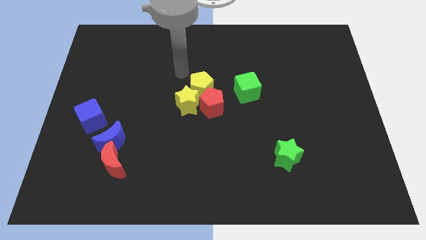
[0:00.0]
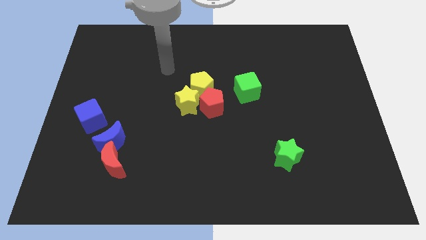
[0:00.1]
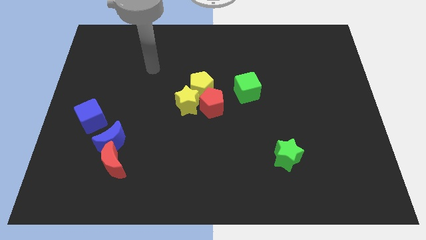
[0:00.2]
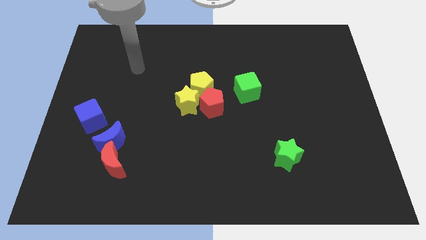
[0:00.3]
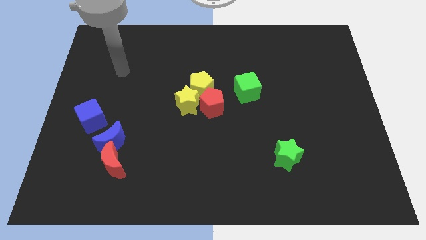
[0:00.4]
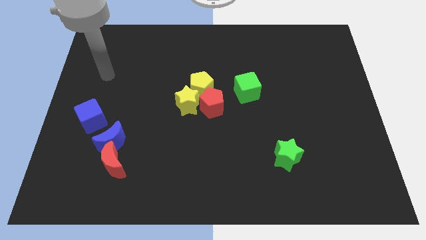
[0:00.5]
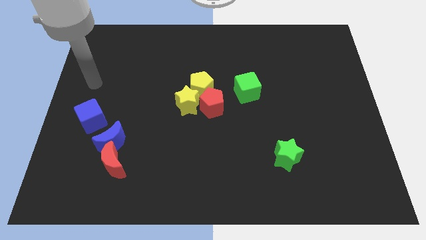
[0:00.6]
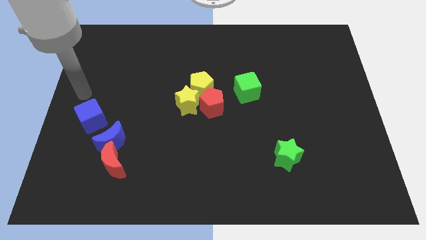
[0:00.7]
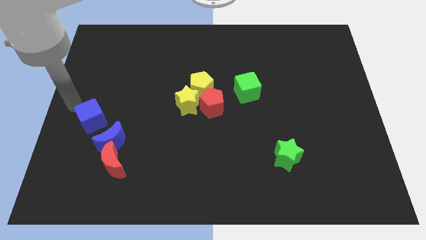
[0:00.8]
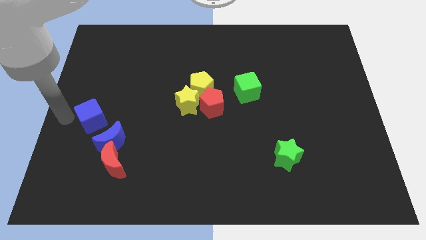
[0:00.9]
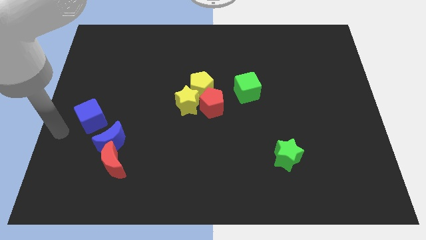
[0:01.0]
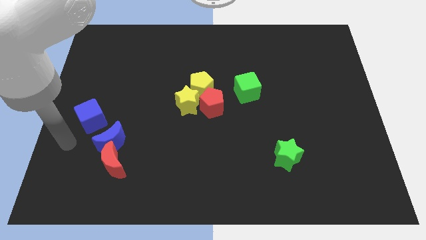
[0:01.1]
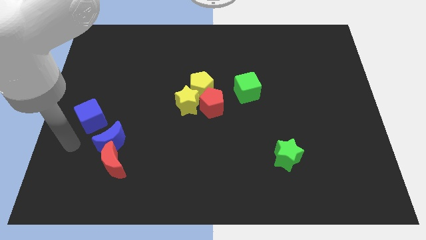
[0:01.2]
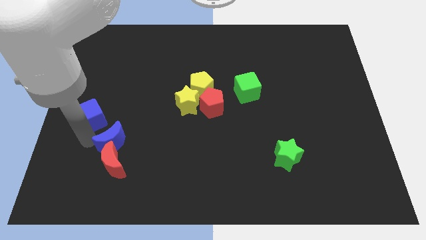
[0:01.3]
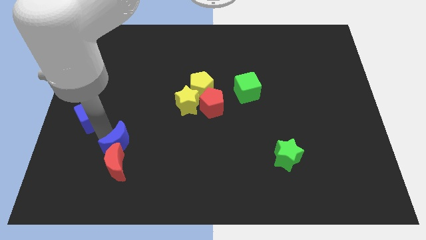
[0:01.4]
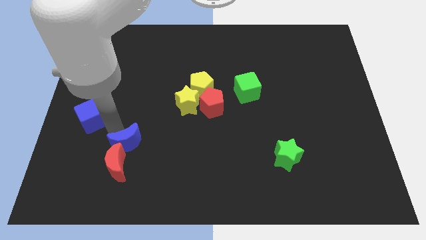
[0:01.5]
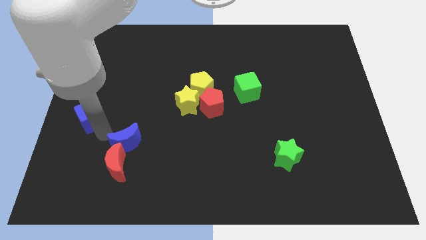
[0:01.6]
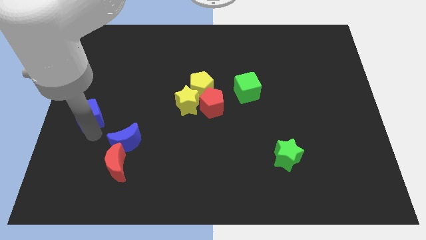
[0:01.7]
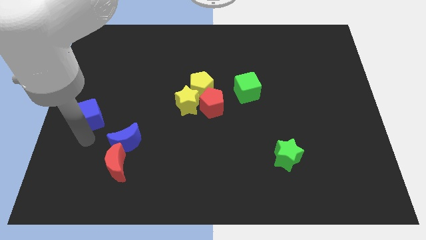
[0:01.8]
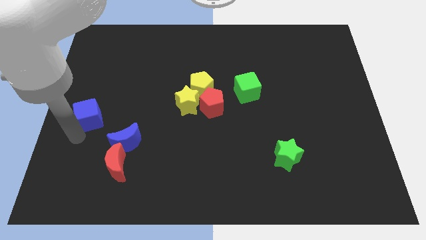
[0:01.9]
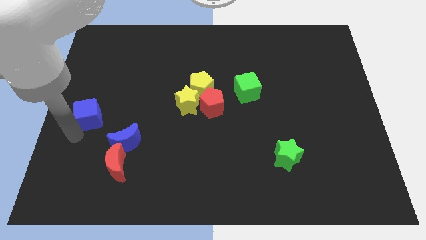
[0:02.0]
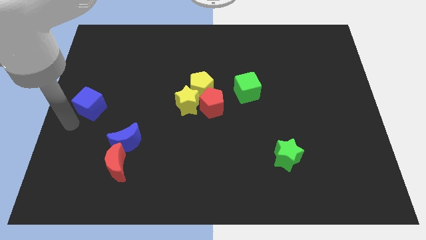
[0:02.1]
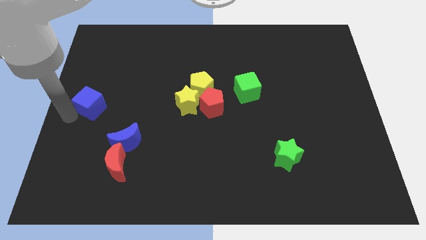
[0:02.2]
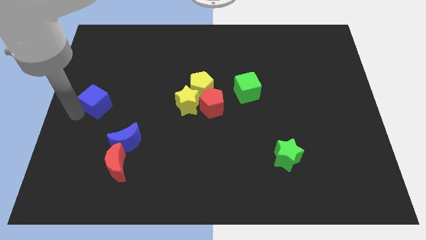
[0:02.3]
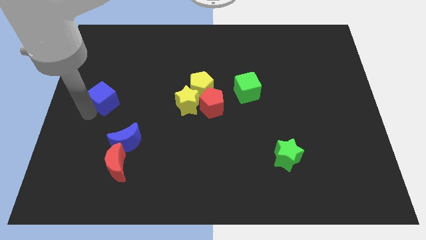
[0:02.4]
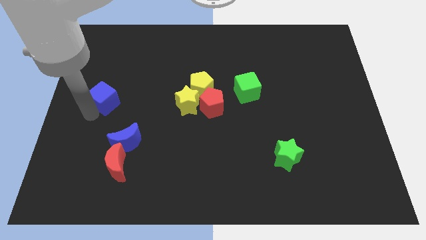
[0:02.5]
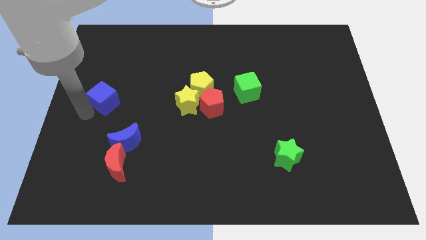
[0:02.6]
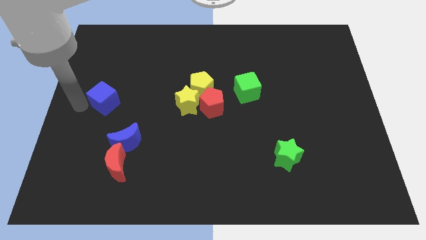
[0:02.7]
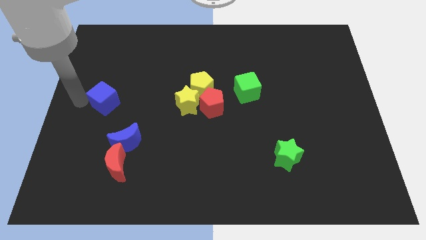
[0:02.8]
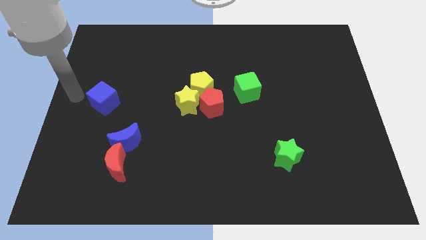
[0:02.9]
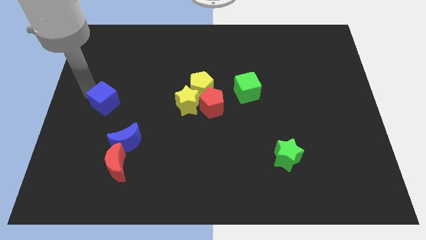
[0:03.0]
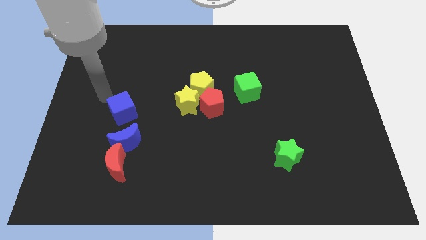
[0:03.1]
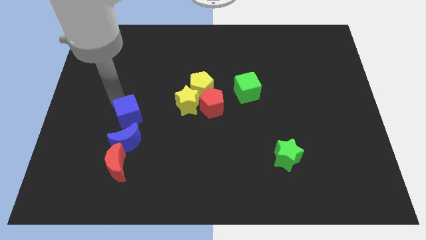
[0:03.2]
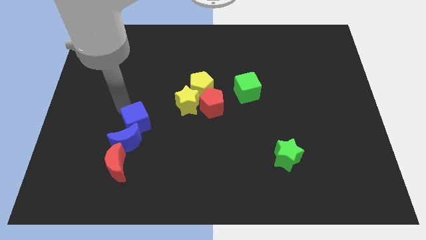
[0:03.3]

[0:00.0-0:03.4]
push the blue cube into blue crescent

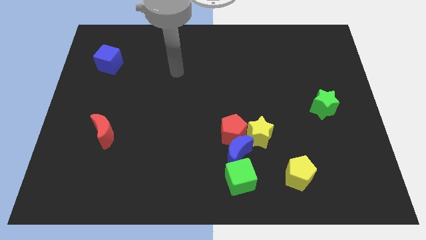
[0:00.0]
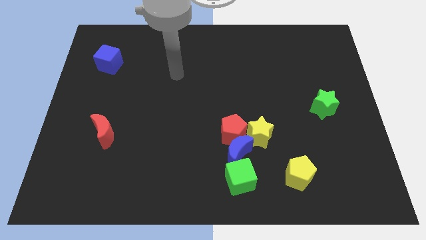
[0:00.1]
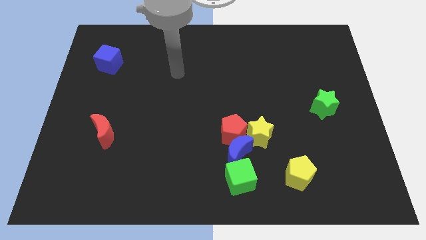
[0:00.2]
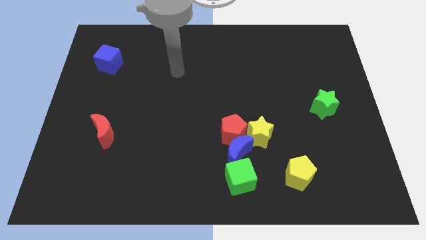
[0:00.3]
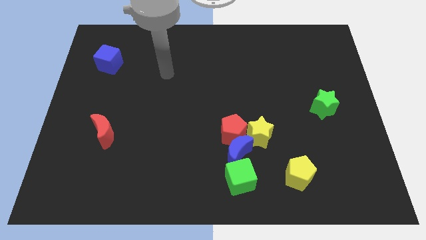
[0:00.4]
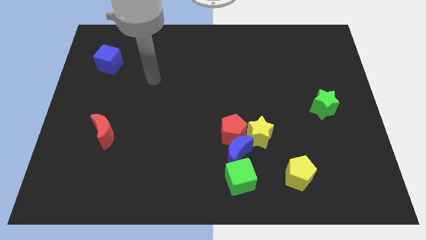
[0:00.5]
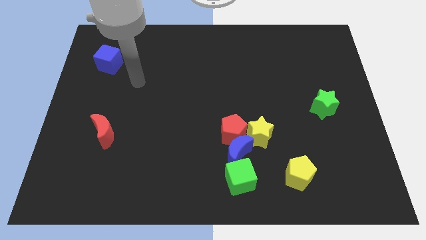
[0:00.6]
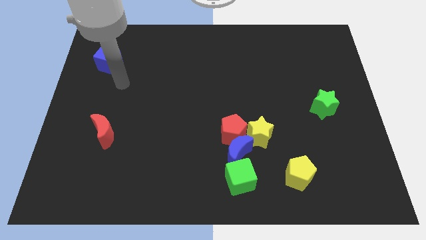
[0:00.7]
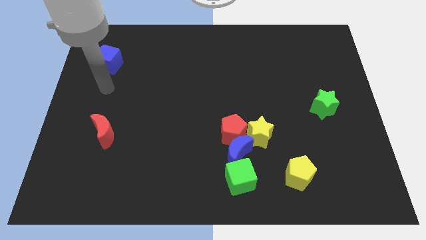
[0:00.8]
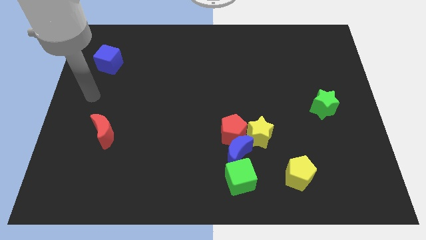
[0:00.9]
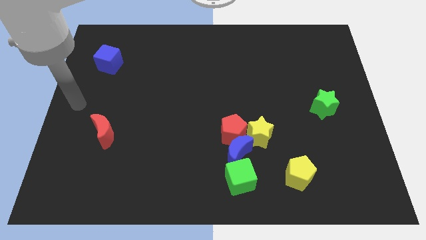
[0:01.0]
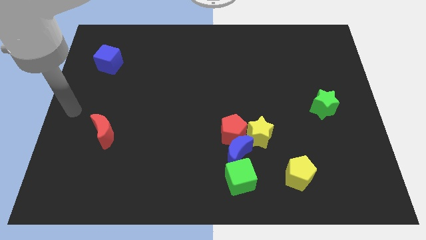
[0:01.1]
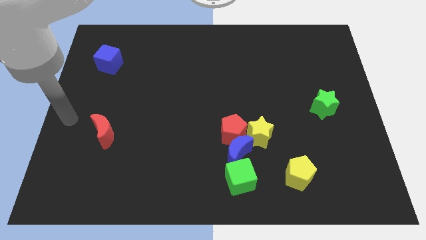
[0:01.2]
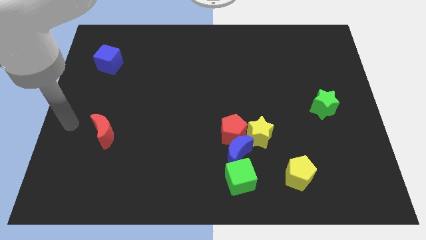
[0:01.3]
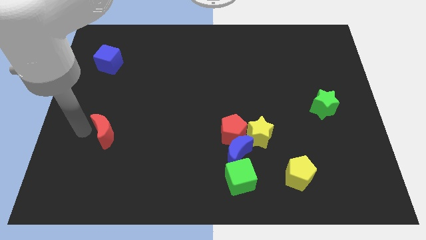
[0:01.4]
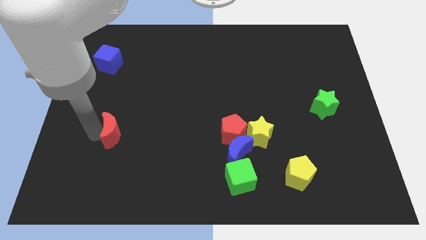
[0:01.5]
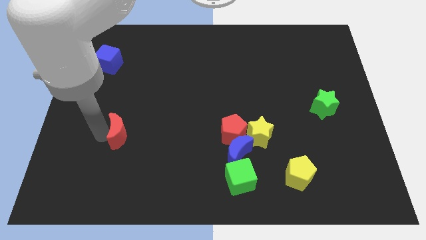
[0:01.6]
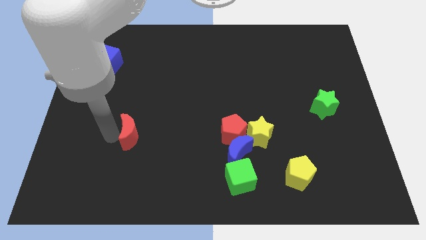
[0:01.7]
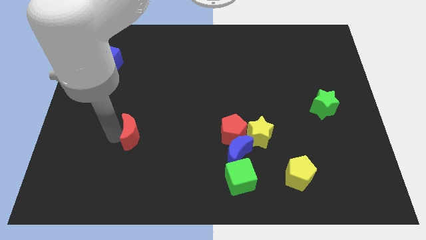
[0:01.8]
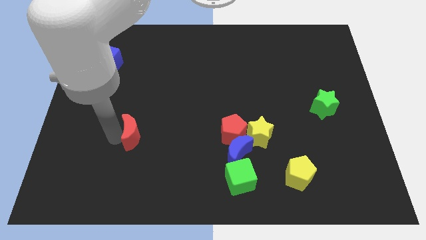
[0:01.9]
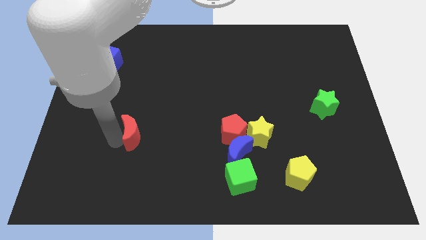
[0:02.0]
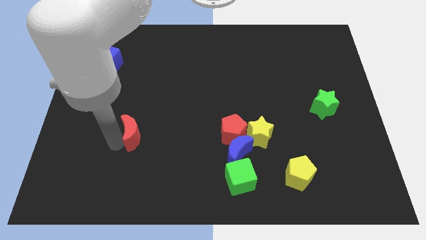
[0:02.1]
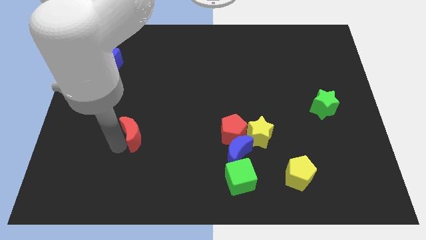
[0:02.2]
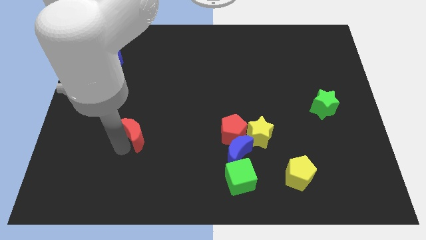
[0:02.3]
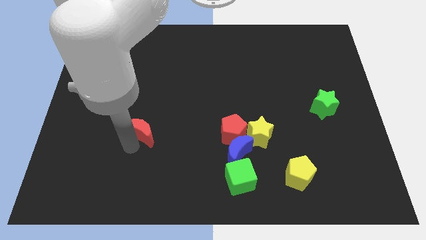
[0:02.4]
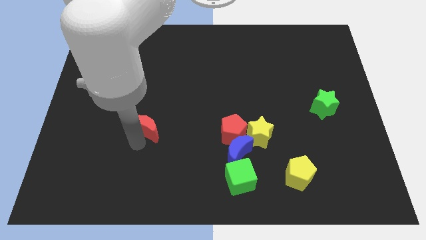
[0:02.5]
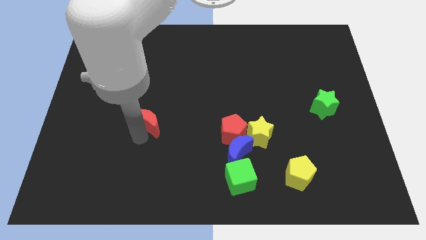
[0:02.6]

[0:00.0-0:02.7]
push the red crescent

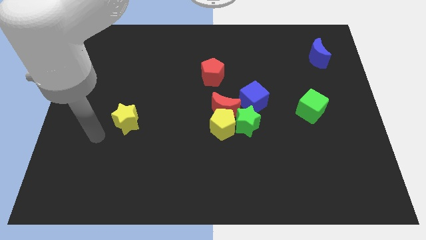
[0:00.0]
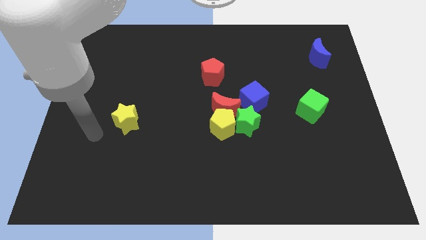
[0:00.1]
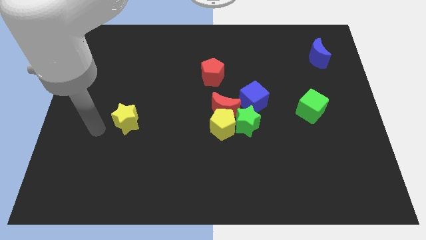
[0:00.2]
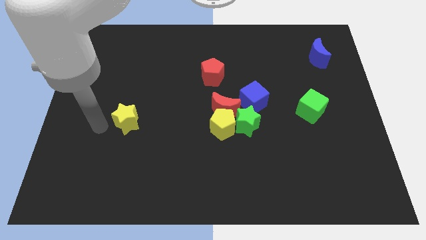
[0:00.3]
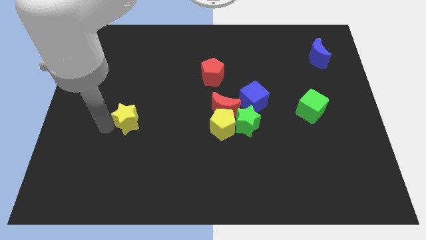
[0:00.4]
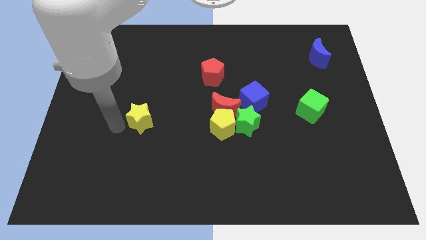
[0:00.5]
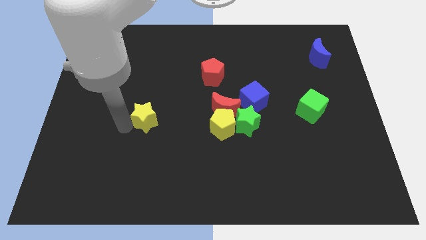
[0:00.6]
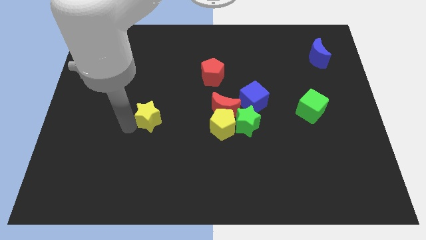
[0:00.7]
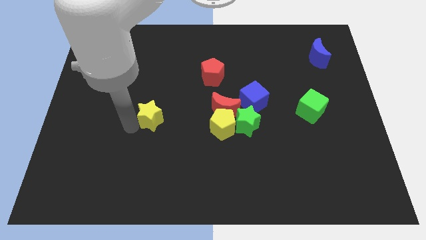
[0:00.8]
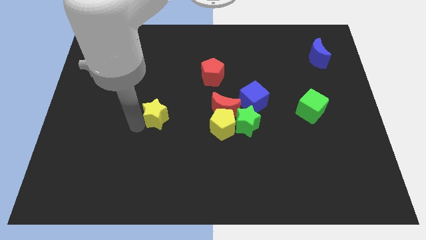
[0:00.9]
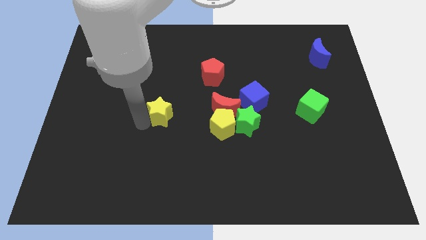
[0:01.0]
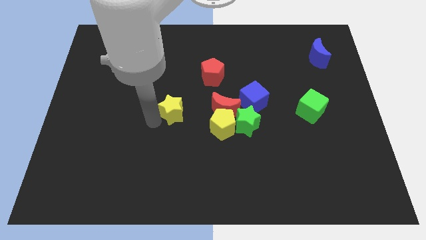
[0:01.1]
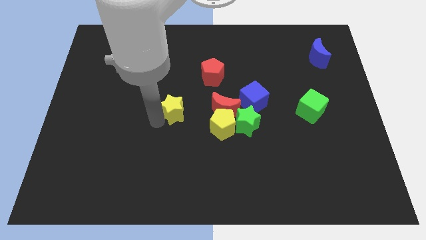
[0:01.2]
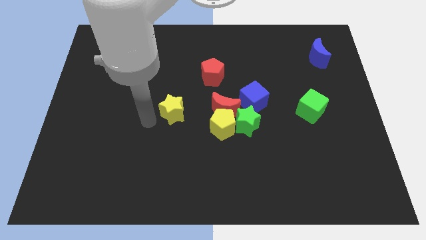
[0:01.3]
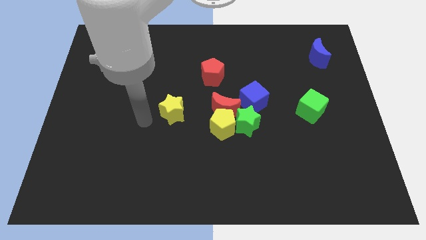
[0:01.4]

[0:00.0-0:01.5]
move the yellow star diagonal to the red pentagon

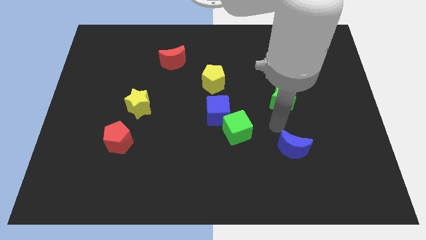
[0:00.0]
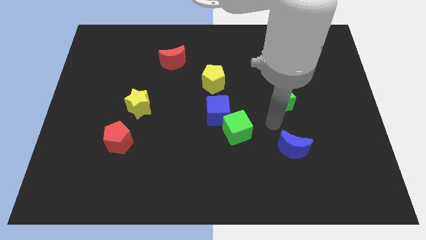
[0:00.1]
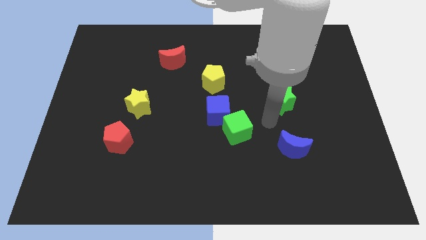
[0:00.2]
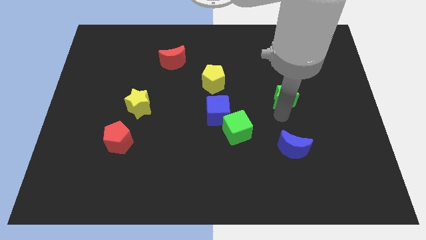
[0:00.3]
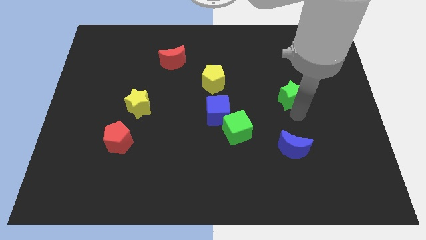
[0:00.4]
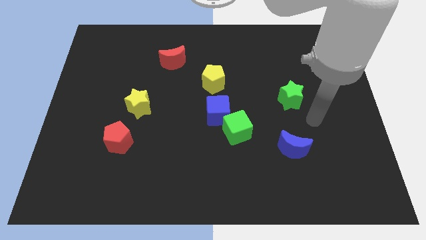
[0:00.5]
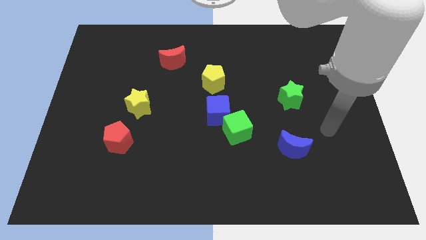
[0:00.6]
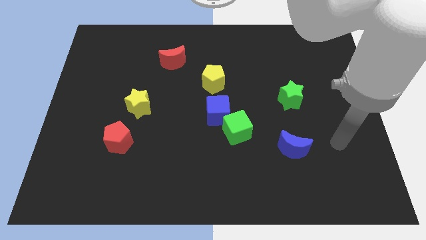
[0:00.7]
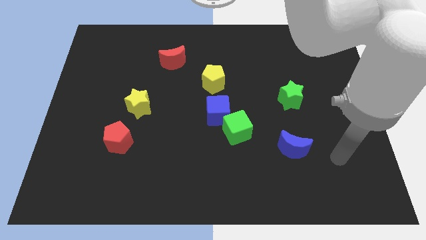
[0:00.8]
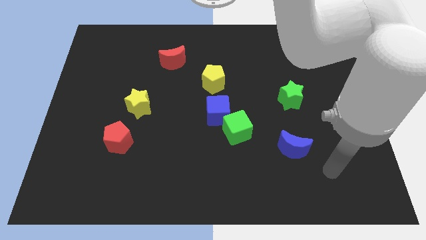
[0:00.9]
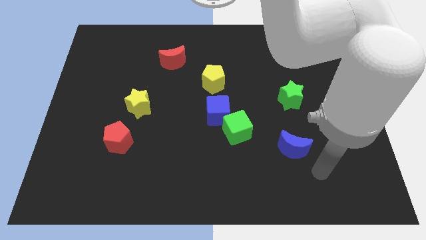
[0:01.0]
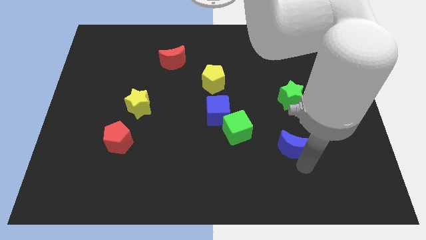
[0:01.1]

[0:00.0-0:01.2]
move your arm towards blue moon

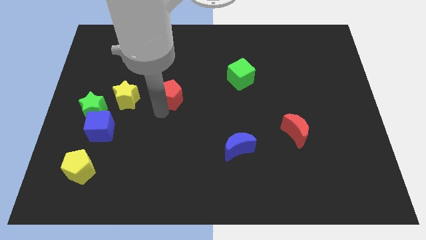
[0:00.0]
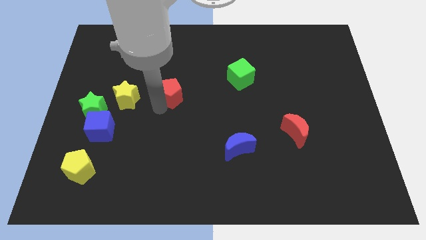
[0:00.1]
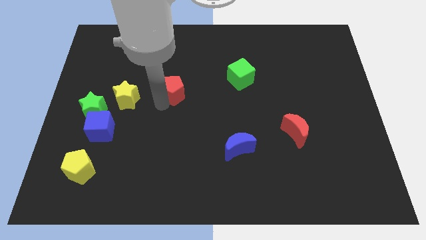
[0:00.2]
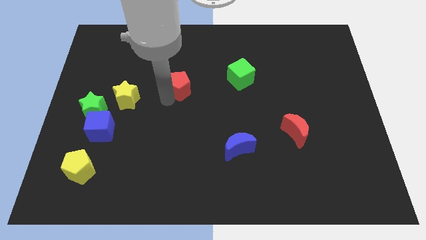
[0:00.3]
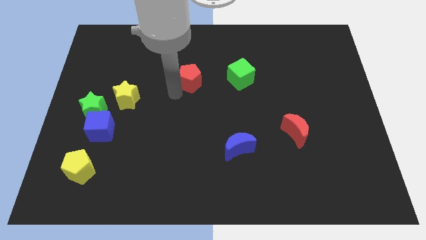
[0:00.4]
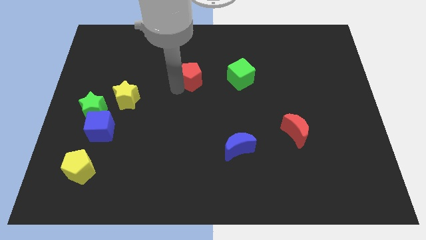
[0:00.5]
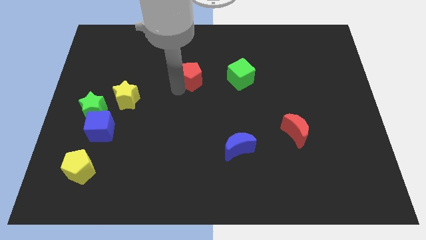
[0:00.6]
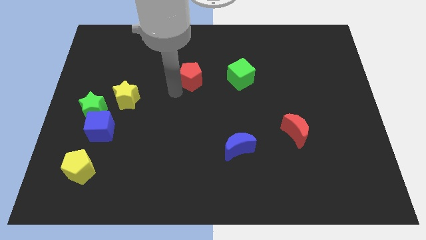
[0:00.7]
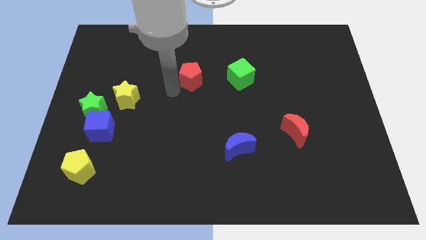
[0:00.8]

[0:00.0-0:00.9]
place the red pentagon parallel to the green cube
